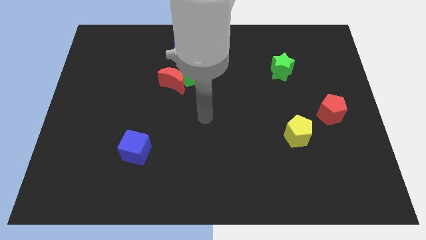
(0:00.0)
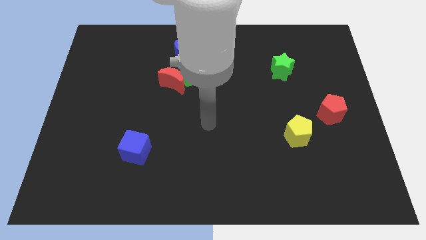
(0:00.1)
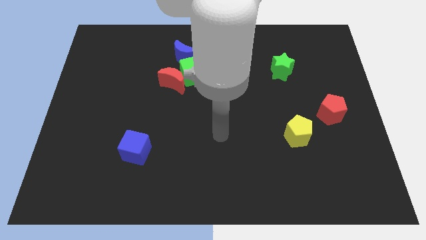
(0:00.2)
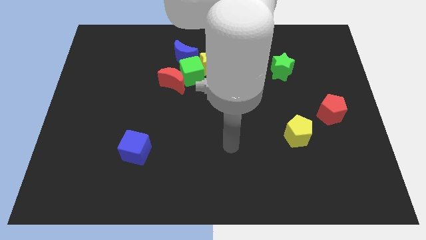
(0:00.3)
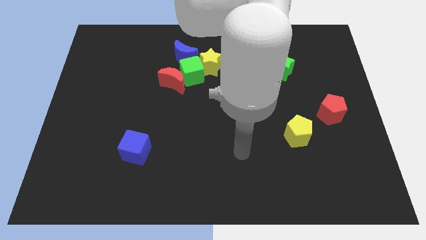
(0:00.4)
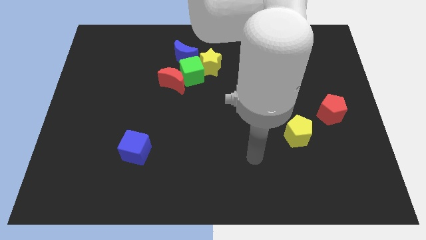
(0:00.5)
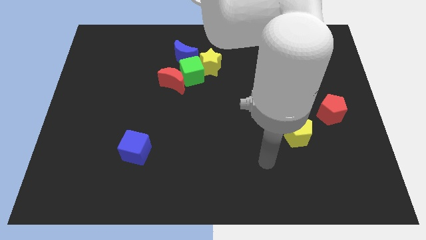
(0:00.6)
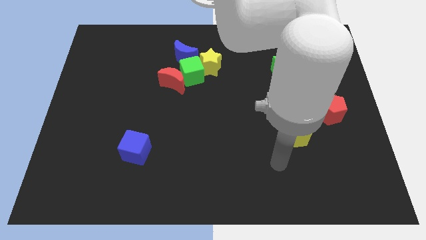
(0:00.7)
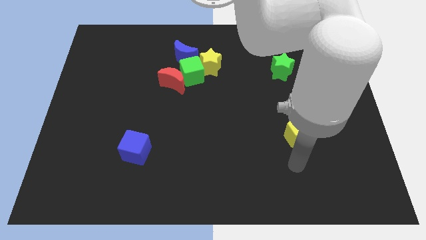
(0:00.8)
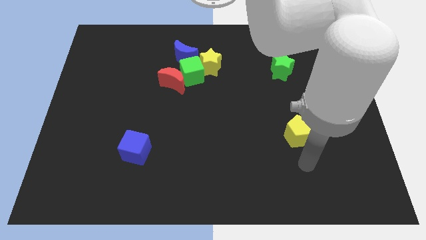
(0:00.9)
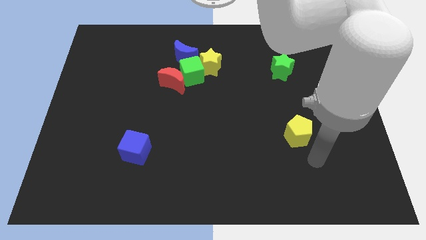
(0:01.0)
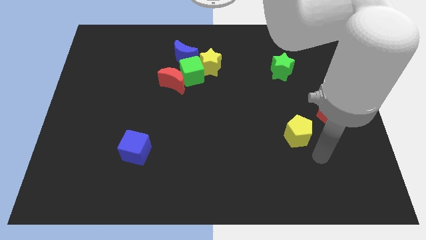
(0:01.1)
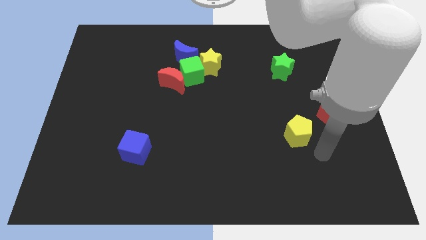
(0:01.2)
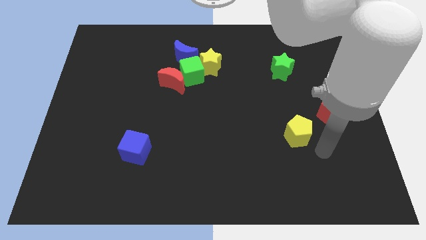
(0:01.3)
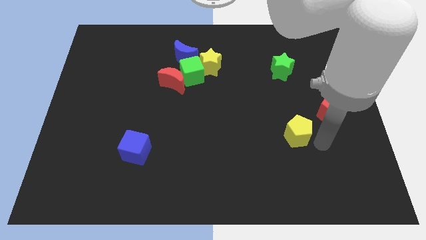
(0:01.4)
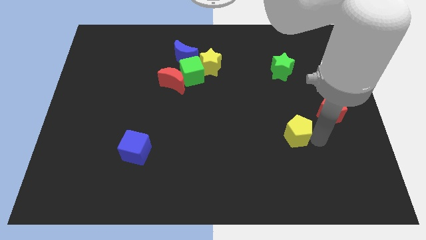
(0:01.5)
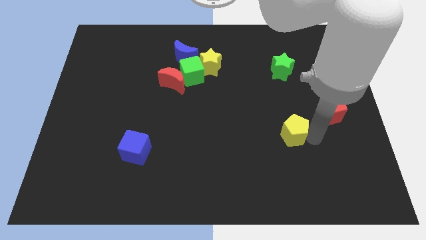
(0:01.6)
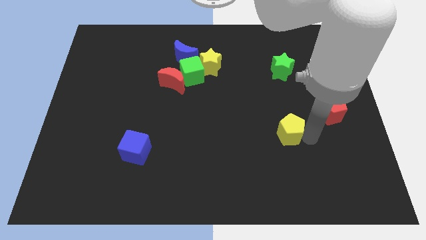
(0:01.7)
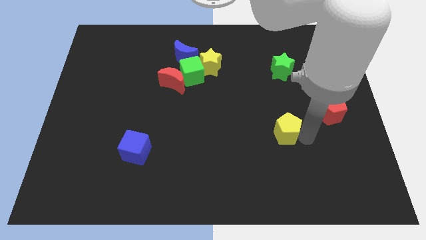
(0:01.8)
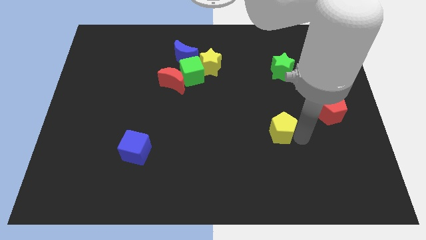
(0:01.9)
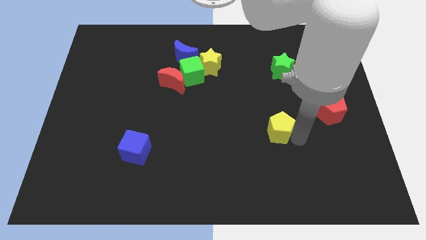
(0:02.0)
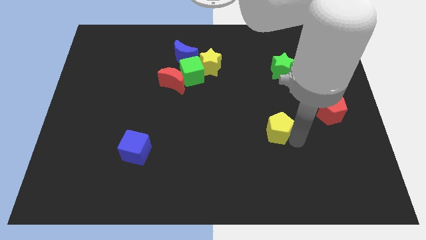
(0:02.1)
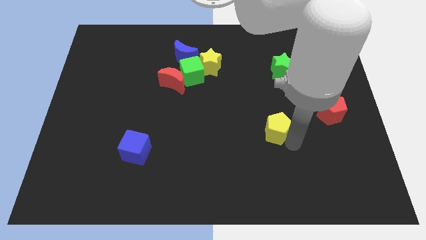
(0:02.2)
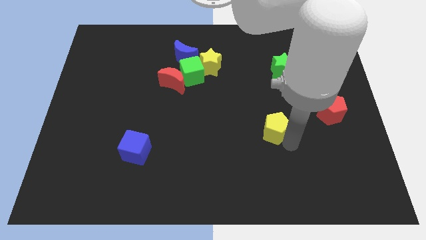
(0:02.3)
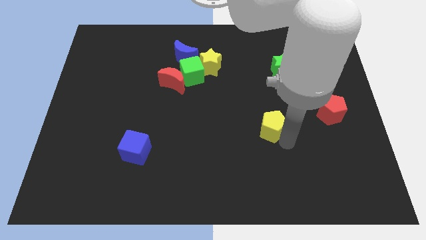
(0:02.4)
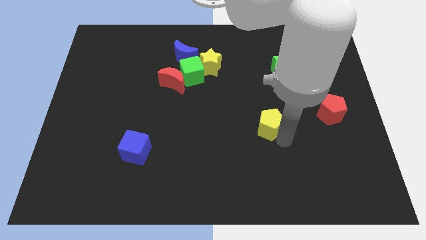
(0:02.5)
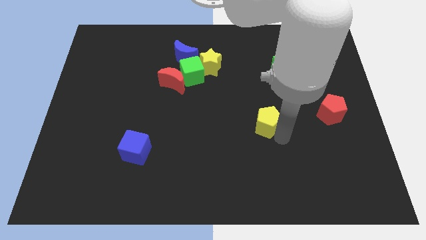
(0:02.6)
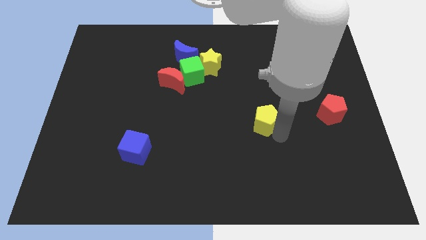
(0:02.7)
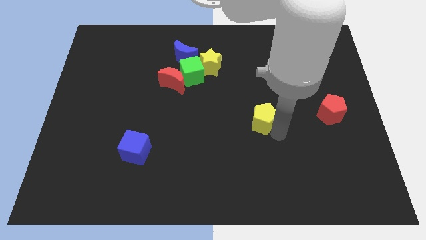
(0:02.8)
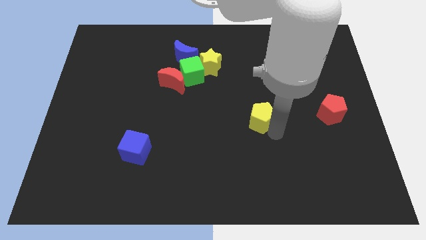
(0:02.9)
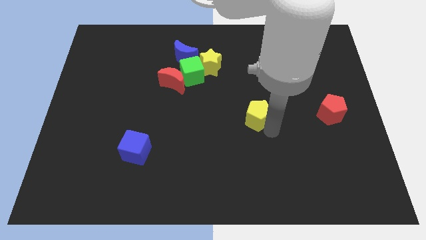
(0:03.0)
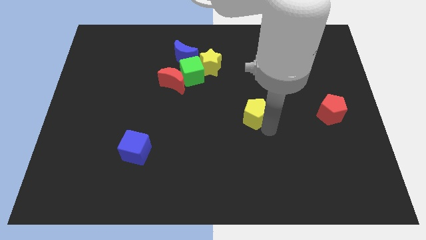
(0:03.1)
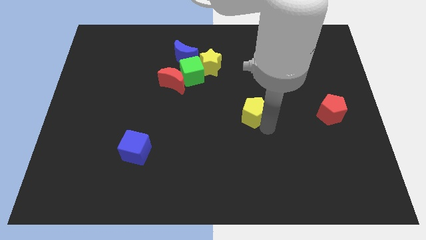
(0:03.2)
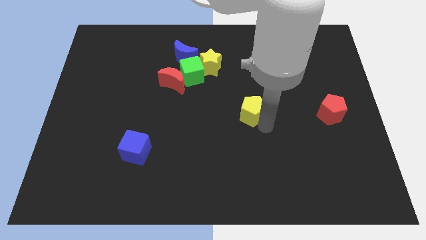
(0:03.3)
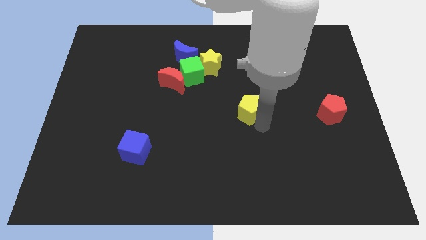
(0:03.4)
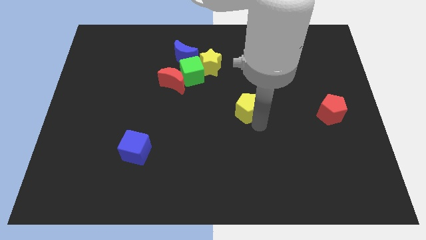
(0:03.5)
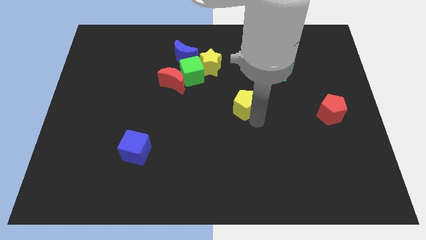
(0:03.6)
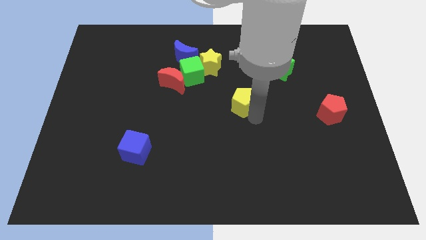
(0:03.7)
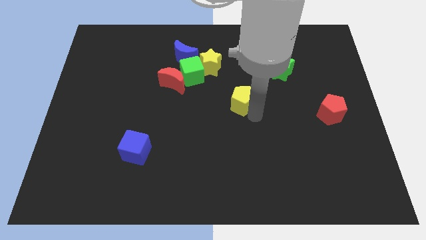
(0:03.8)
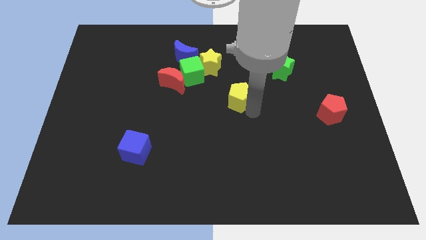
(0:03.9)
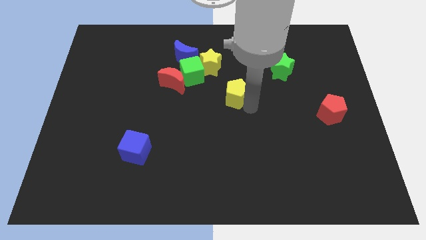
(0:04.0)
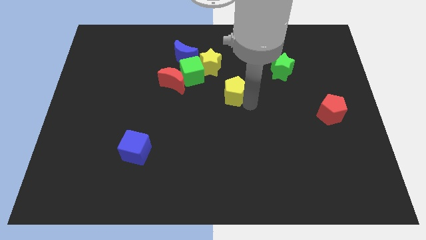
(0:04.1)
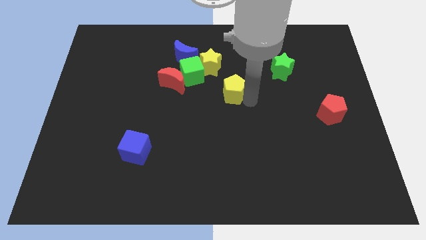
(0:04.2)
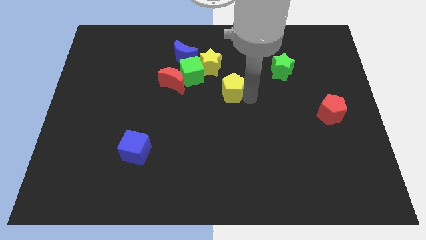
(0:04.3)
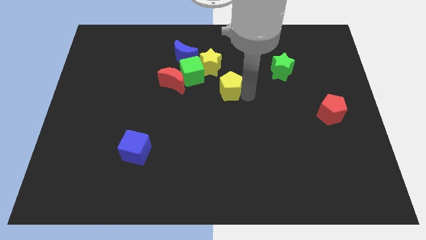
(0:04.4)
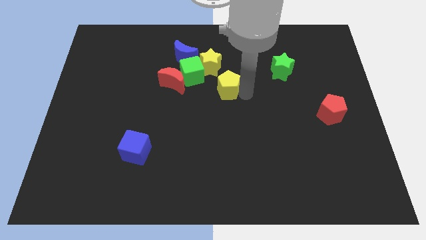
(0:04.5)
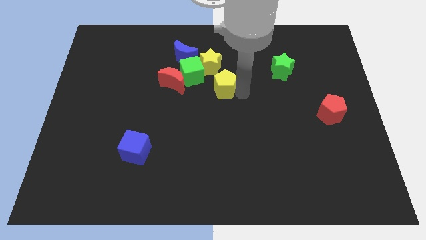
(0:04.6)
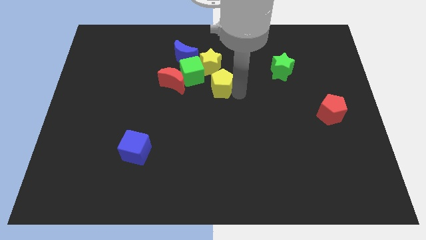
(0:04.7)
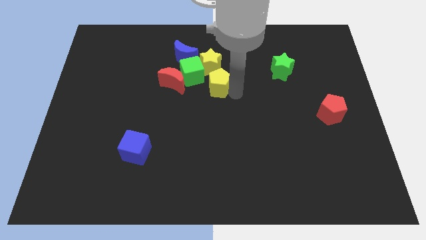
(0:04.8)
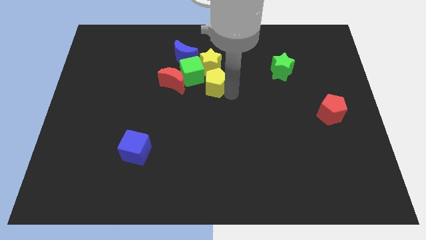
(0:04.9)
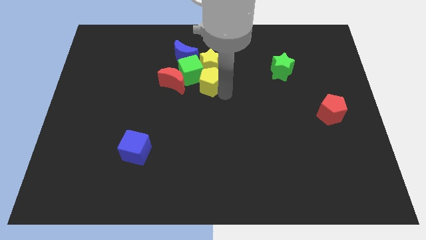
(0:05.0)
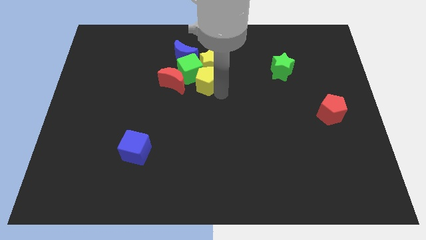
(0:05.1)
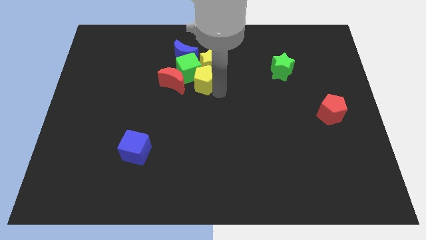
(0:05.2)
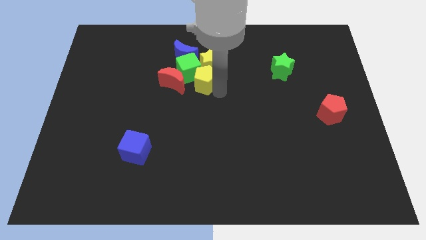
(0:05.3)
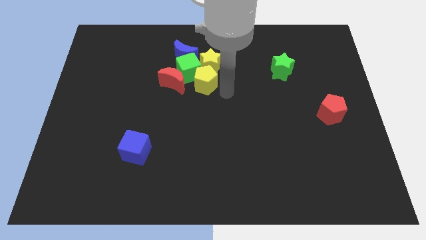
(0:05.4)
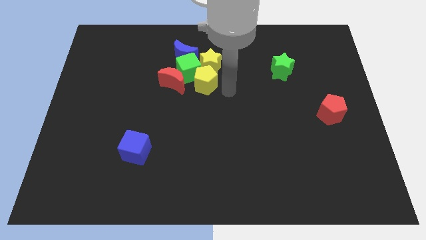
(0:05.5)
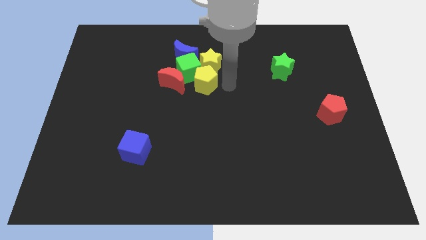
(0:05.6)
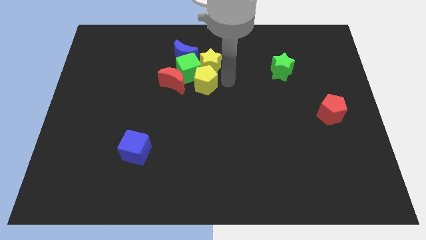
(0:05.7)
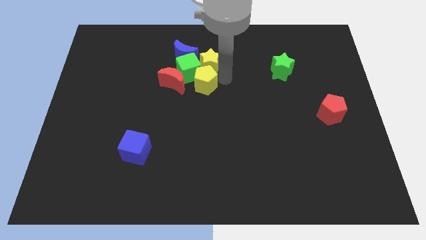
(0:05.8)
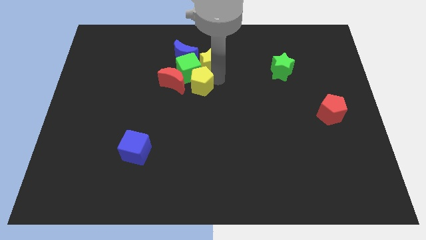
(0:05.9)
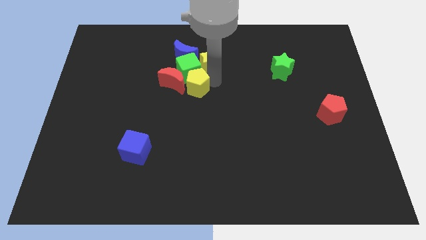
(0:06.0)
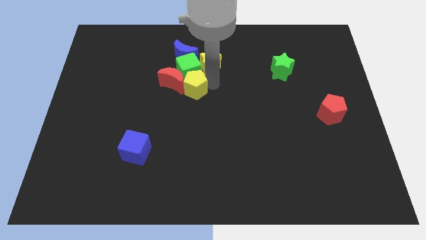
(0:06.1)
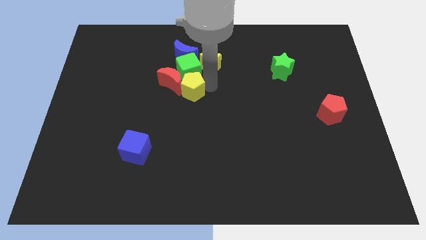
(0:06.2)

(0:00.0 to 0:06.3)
slide the yellow pentagon close to the red moon

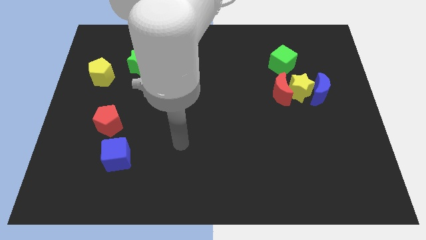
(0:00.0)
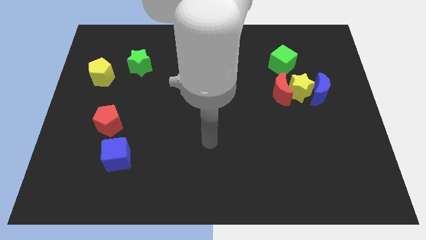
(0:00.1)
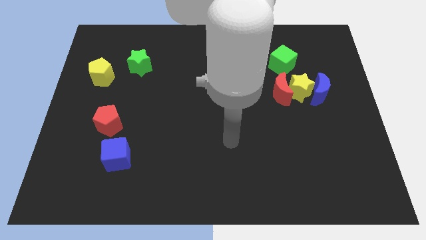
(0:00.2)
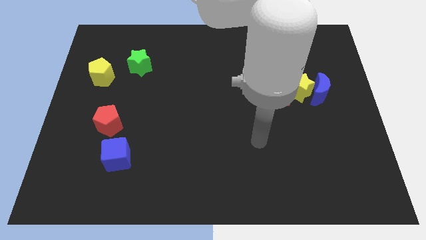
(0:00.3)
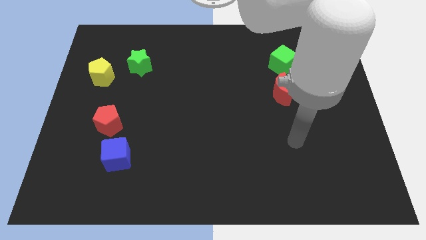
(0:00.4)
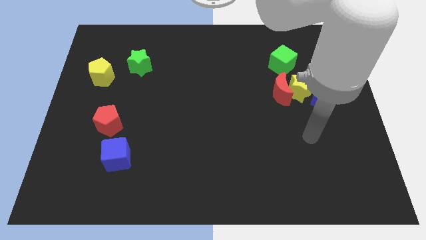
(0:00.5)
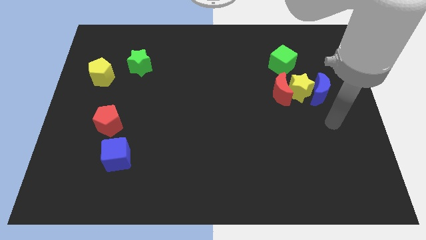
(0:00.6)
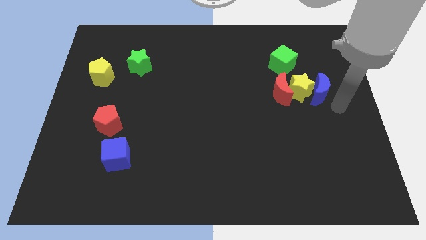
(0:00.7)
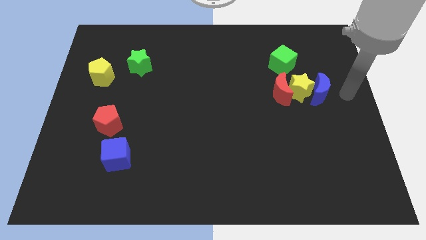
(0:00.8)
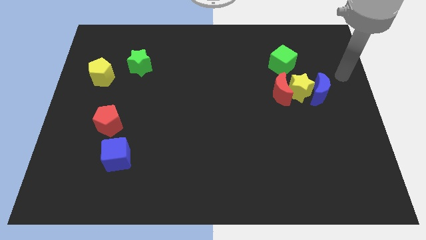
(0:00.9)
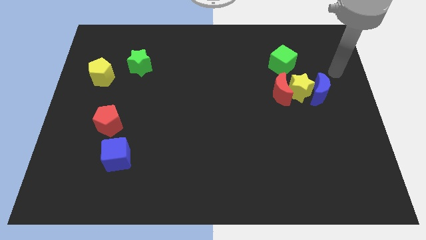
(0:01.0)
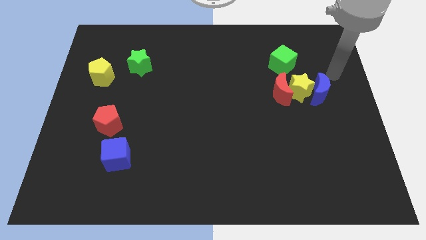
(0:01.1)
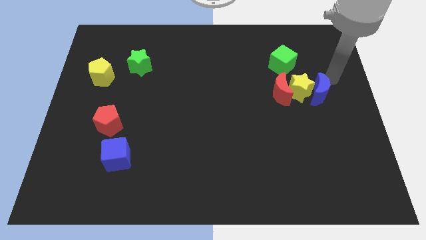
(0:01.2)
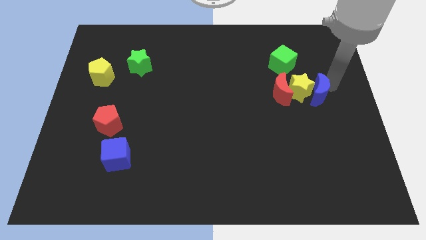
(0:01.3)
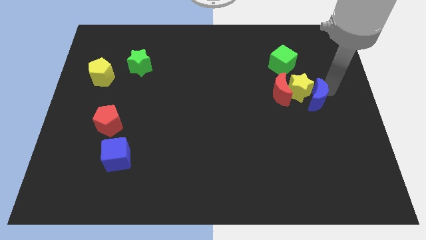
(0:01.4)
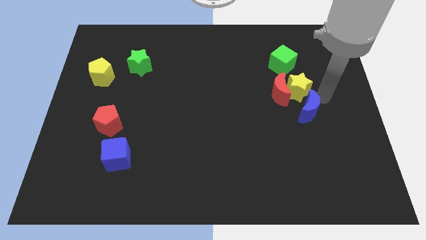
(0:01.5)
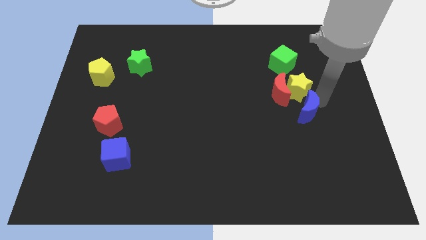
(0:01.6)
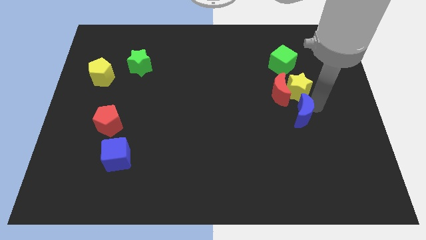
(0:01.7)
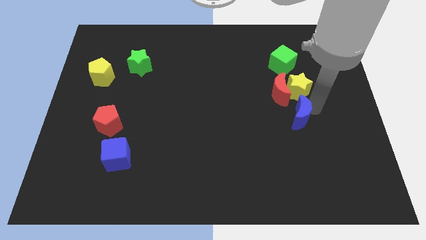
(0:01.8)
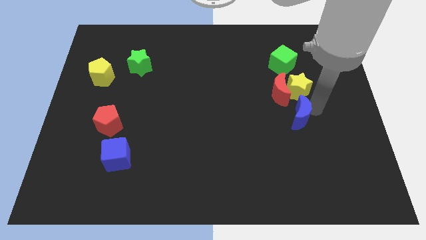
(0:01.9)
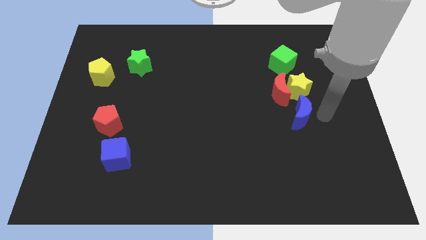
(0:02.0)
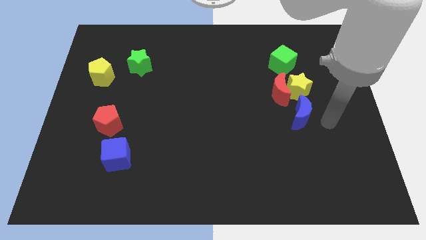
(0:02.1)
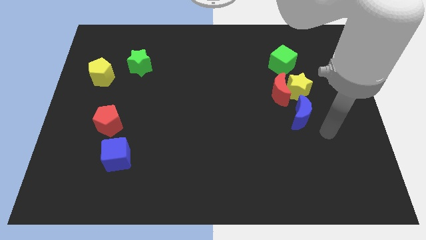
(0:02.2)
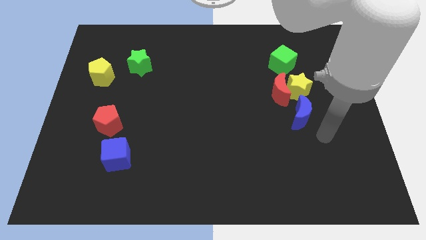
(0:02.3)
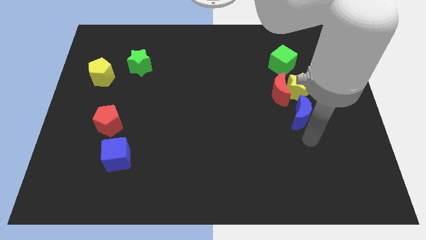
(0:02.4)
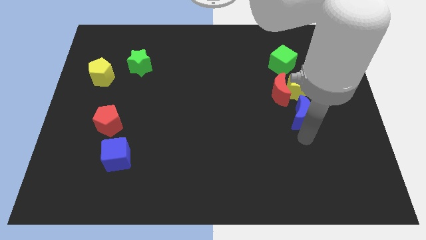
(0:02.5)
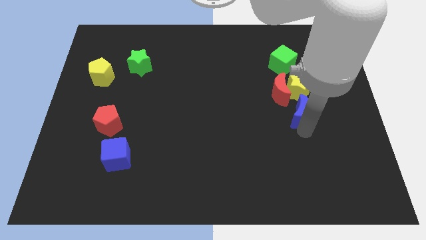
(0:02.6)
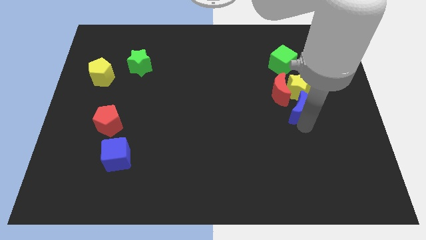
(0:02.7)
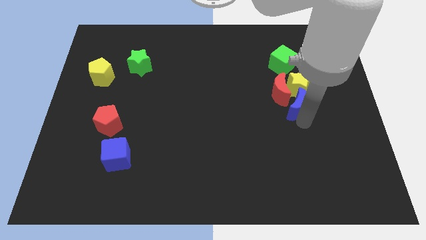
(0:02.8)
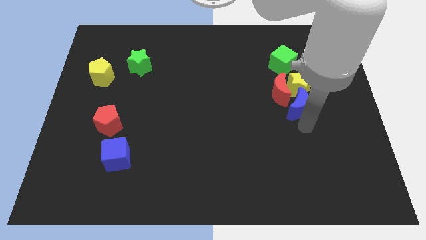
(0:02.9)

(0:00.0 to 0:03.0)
push the blue moon next to the red moon
